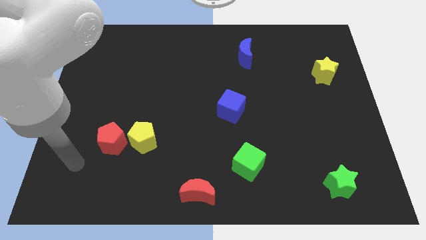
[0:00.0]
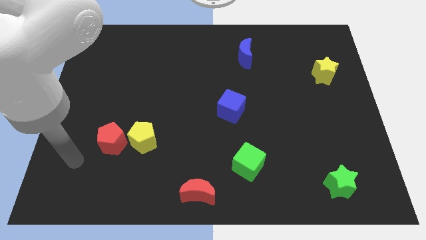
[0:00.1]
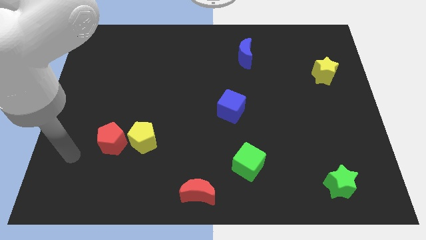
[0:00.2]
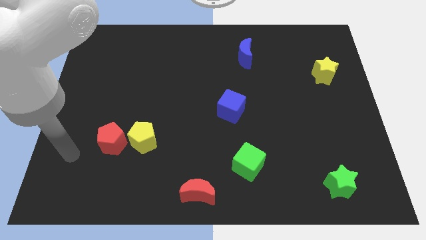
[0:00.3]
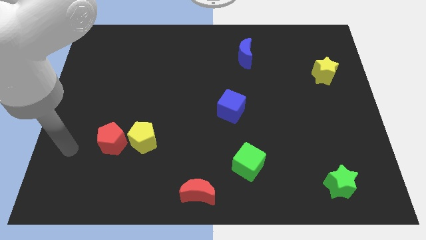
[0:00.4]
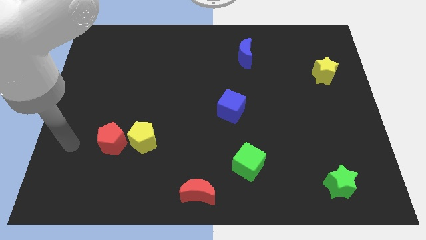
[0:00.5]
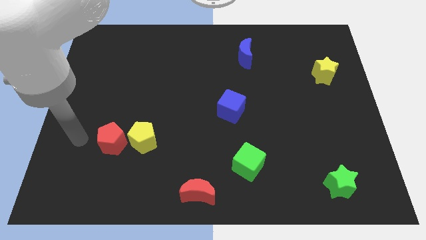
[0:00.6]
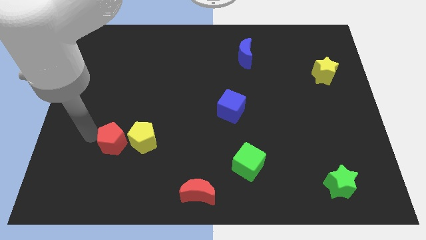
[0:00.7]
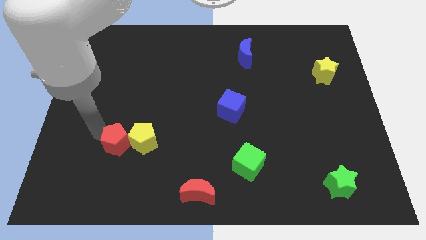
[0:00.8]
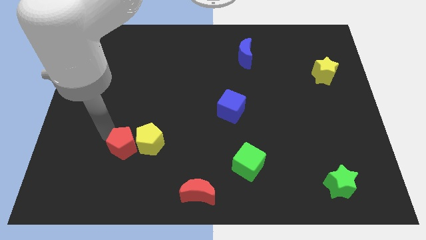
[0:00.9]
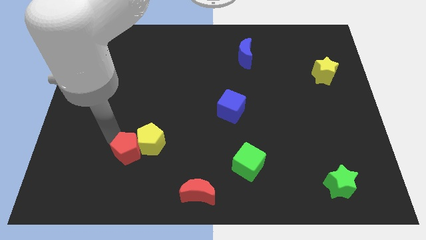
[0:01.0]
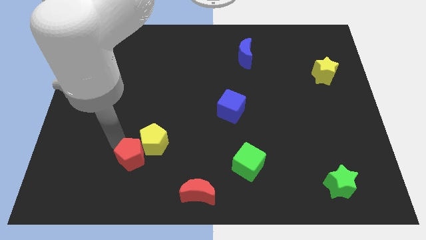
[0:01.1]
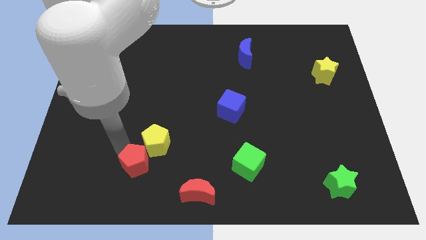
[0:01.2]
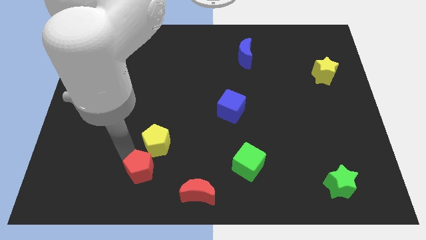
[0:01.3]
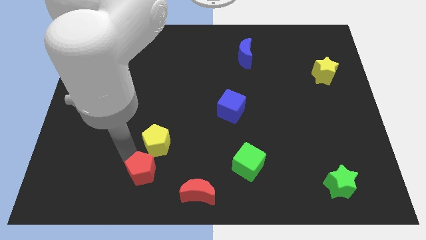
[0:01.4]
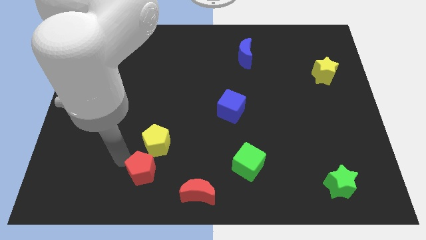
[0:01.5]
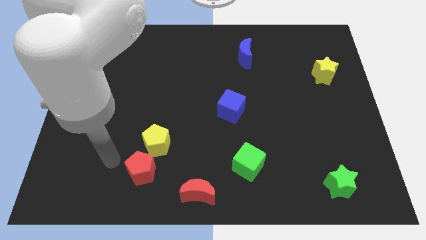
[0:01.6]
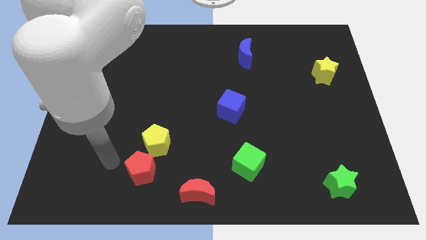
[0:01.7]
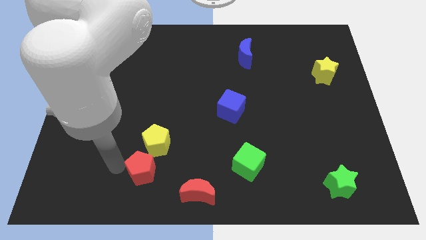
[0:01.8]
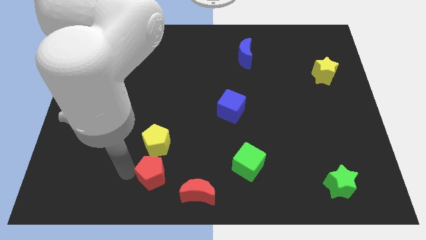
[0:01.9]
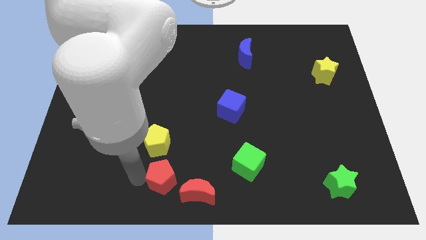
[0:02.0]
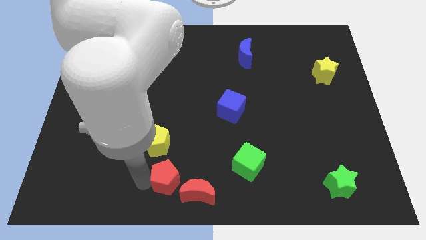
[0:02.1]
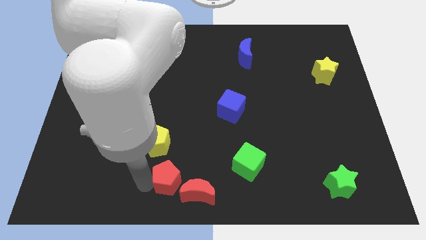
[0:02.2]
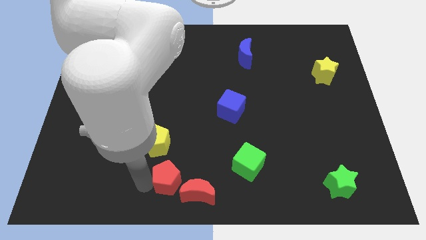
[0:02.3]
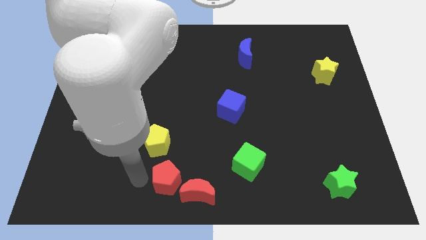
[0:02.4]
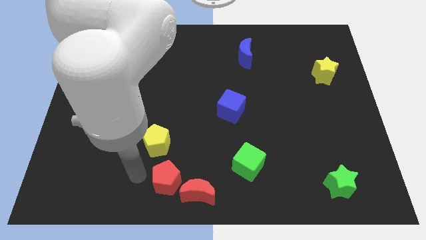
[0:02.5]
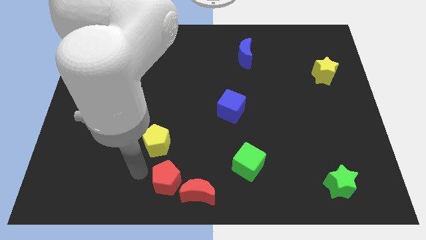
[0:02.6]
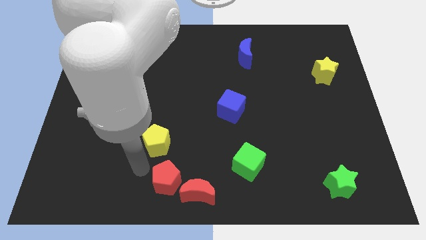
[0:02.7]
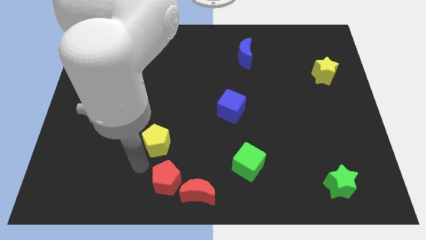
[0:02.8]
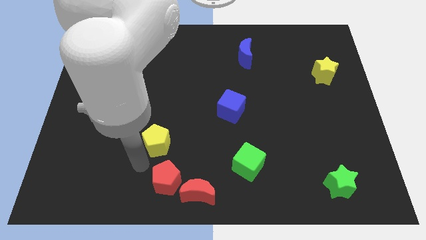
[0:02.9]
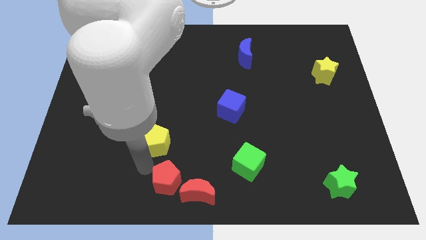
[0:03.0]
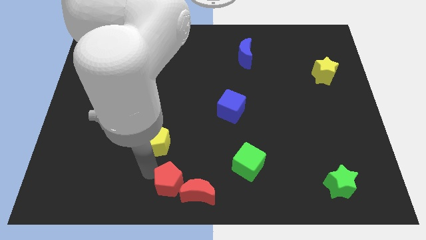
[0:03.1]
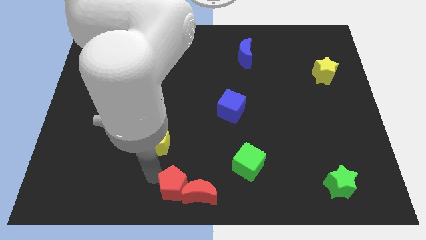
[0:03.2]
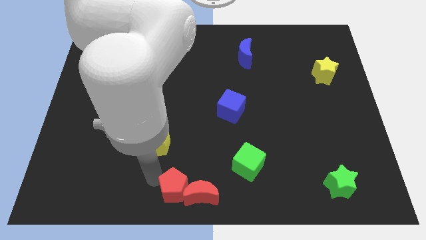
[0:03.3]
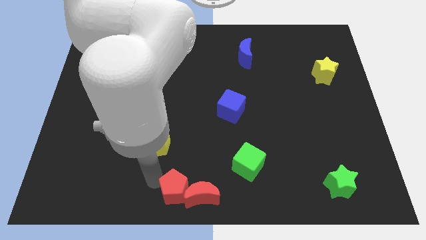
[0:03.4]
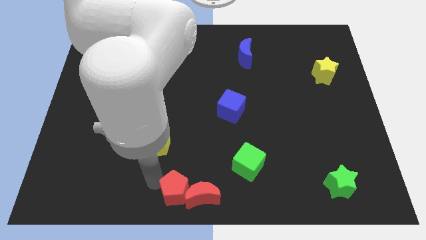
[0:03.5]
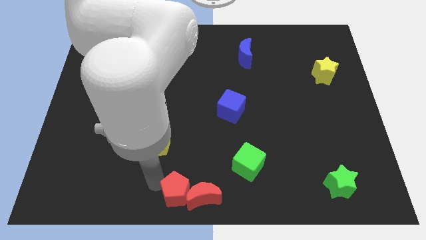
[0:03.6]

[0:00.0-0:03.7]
push the red pentagon into the red moon

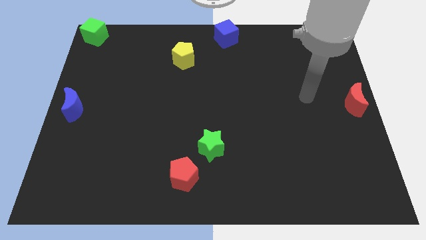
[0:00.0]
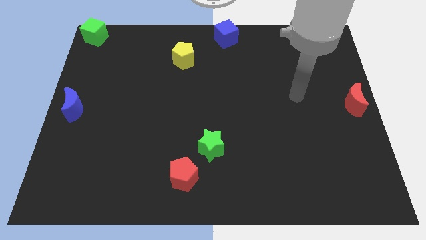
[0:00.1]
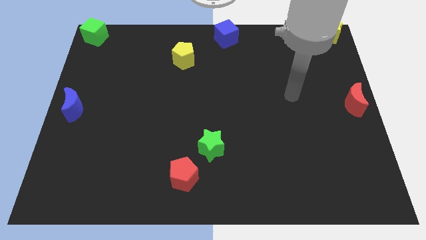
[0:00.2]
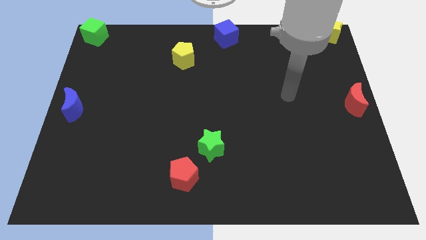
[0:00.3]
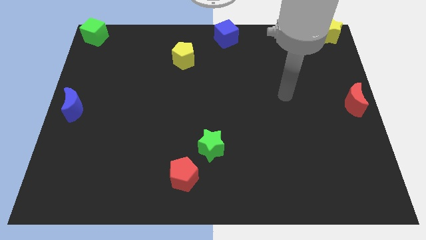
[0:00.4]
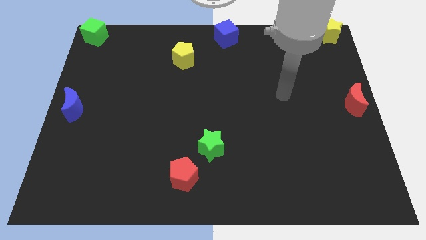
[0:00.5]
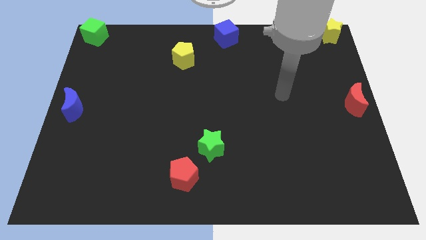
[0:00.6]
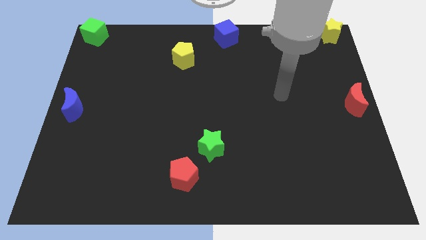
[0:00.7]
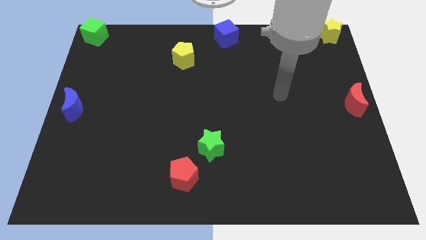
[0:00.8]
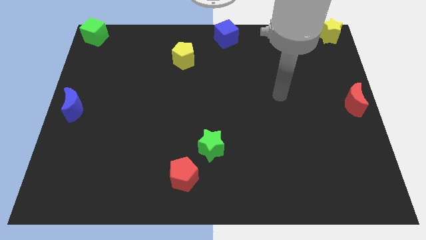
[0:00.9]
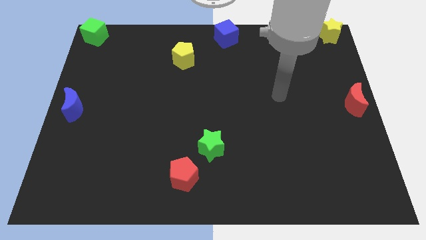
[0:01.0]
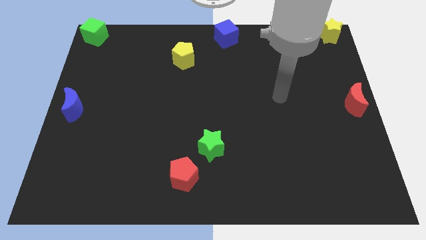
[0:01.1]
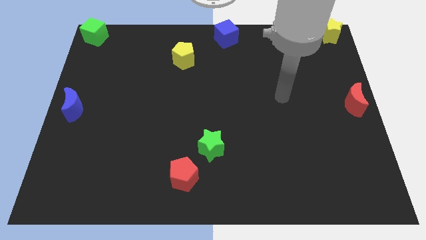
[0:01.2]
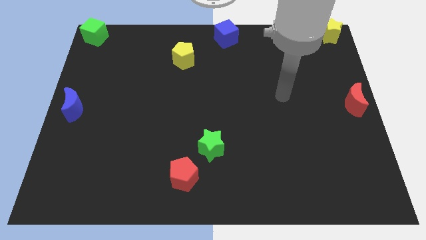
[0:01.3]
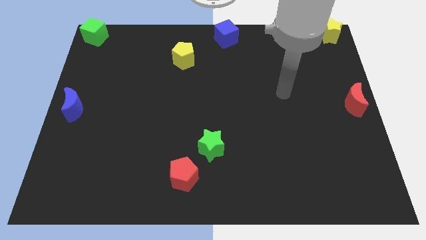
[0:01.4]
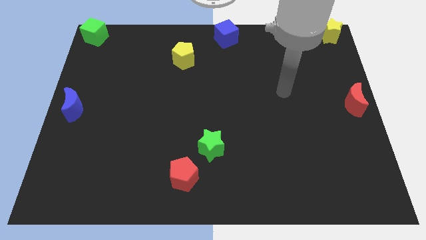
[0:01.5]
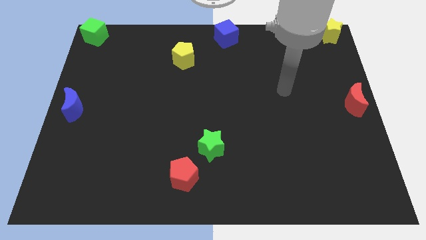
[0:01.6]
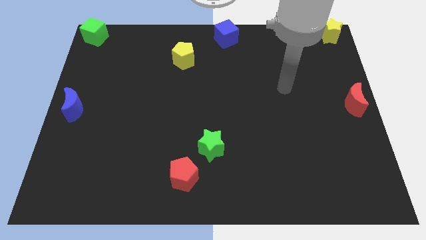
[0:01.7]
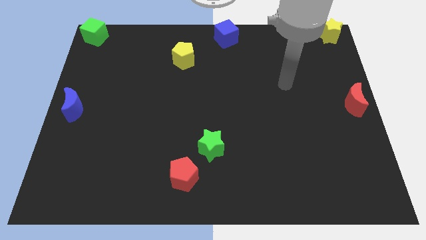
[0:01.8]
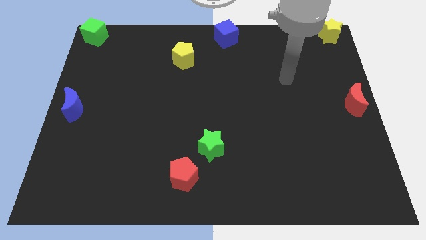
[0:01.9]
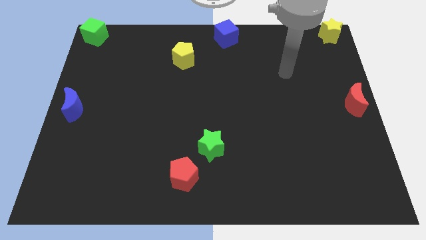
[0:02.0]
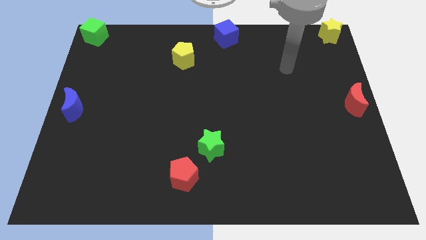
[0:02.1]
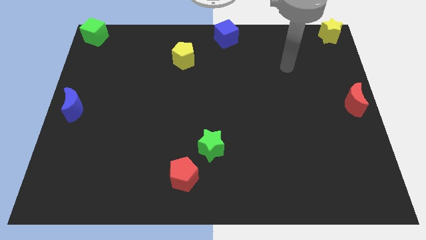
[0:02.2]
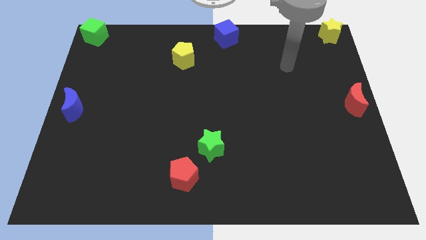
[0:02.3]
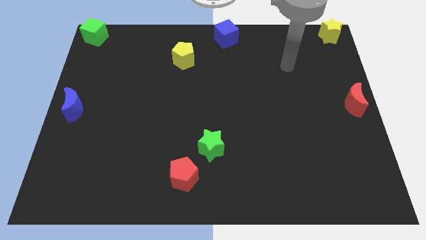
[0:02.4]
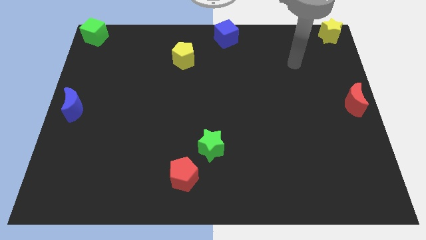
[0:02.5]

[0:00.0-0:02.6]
move the arm away from the red moon

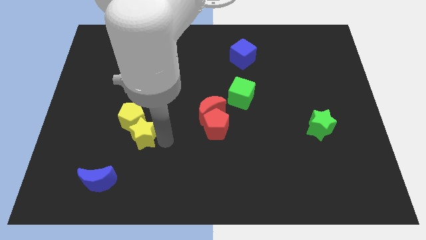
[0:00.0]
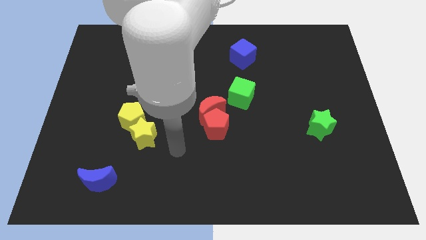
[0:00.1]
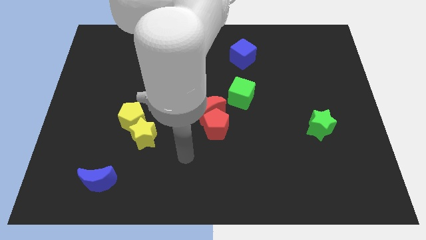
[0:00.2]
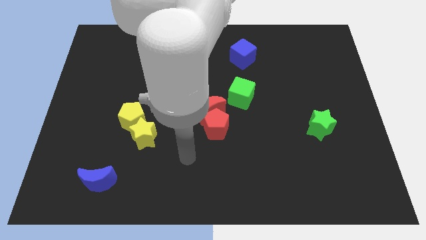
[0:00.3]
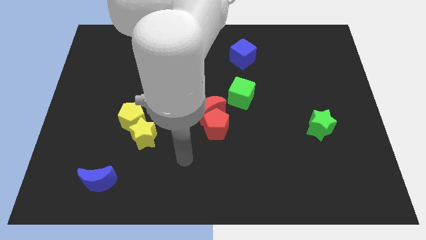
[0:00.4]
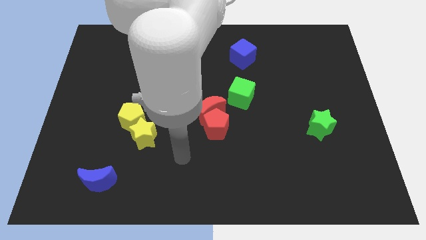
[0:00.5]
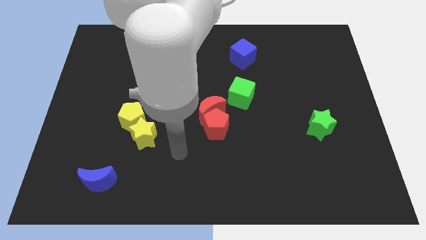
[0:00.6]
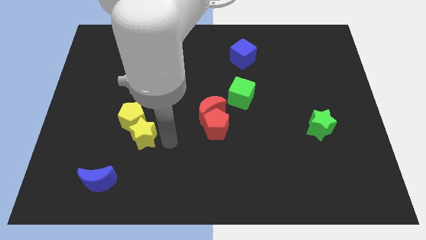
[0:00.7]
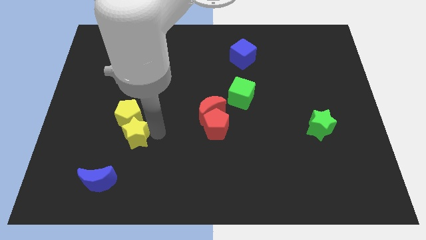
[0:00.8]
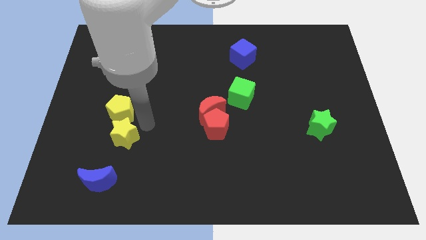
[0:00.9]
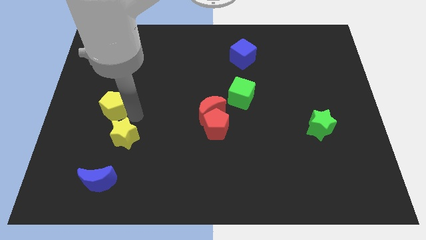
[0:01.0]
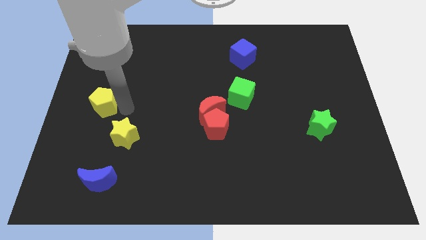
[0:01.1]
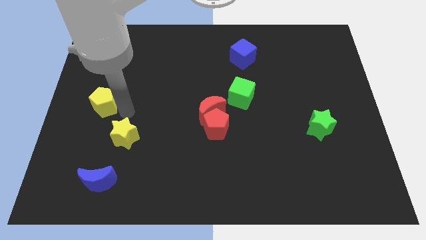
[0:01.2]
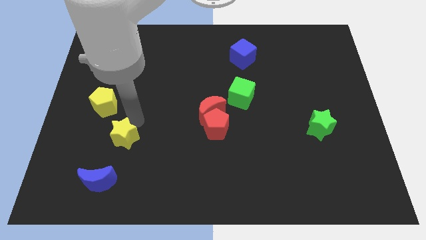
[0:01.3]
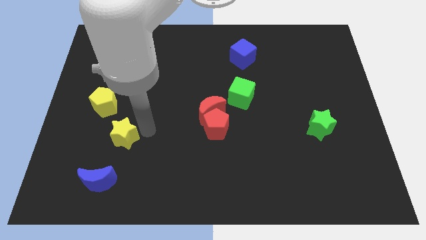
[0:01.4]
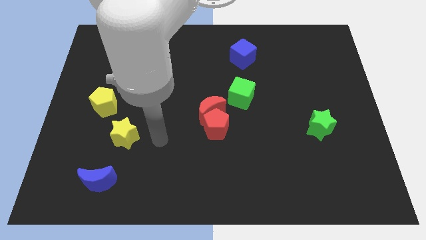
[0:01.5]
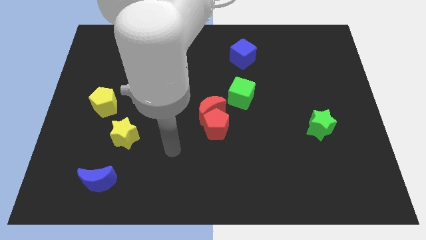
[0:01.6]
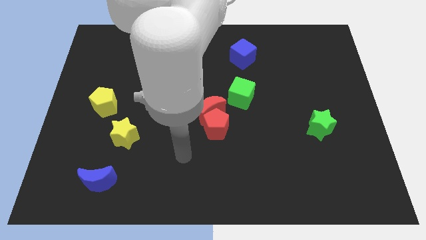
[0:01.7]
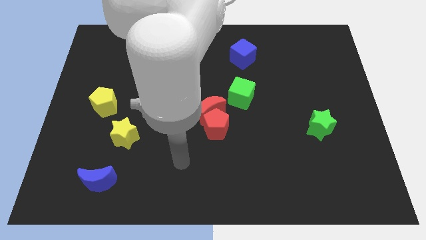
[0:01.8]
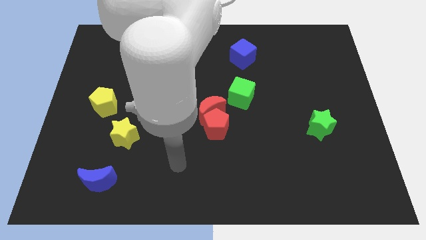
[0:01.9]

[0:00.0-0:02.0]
separate the yellow pentagon and yellow star away from each other

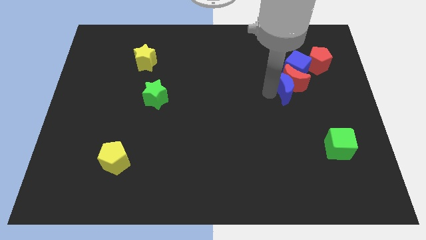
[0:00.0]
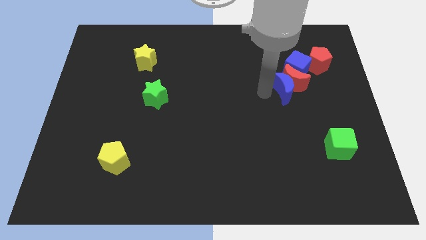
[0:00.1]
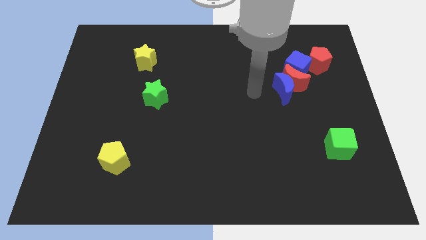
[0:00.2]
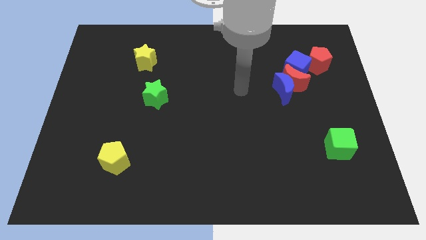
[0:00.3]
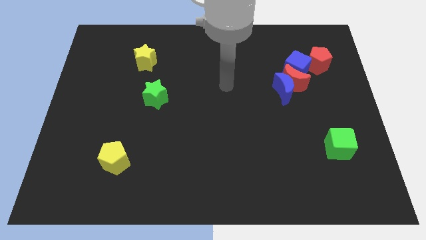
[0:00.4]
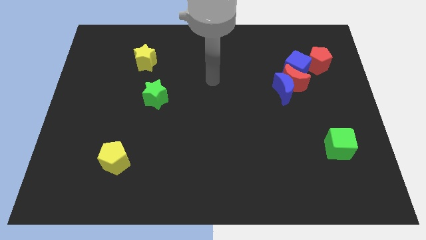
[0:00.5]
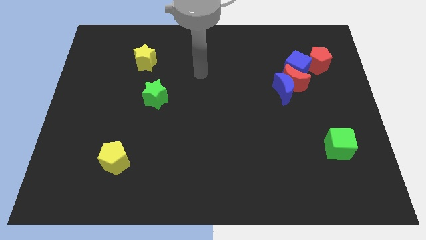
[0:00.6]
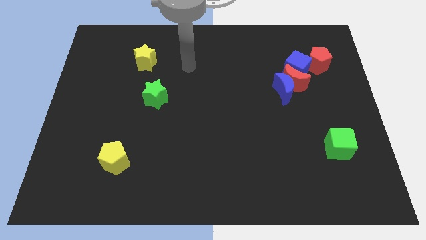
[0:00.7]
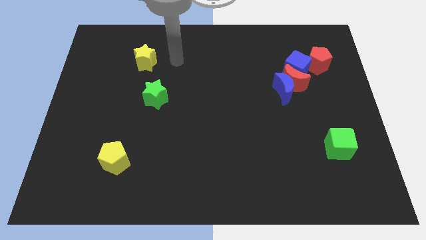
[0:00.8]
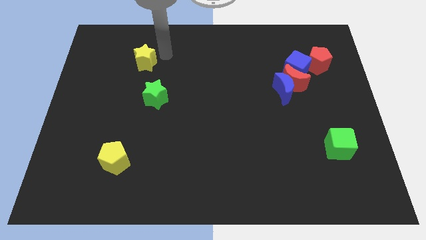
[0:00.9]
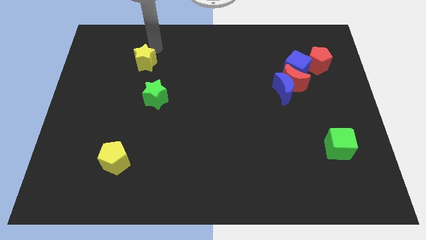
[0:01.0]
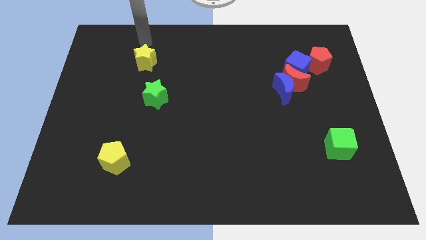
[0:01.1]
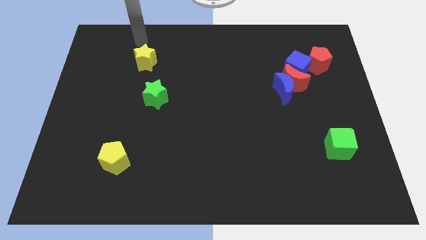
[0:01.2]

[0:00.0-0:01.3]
point your arm at the top of the yellow star
